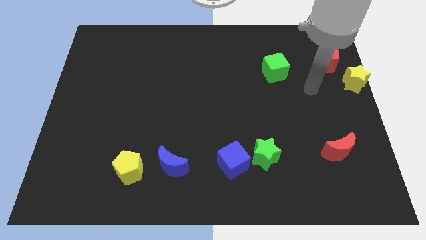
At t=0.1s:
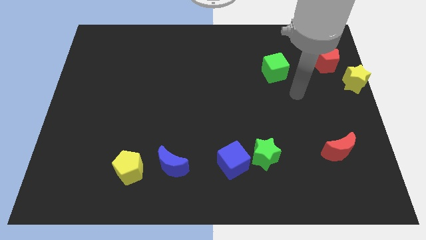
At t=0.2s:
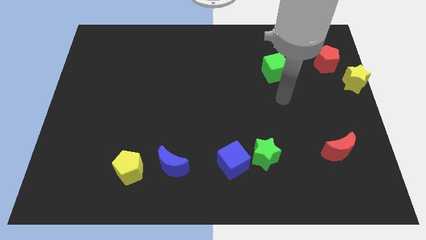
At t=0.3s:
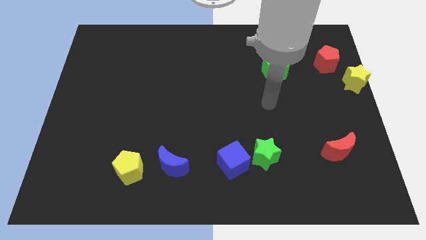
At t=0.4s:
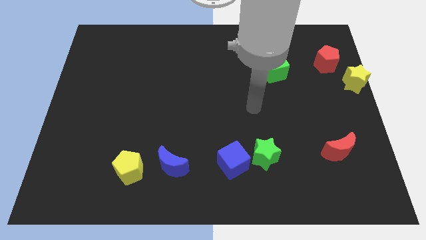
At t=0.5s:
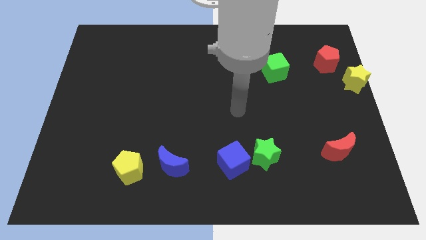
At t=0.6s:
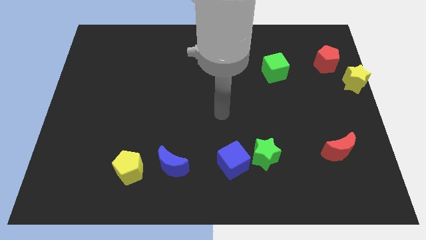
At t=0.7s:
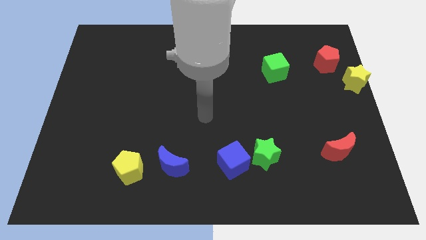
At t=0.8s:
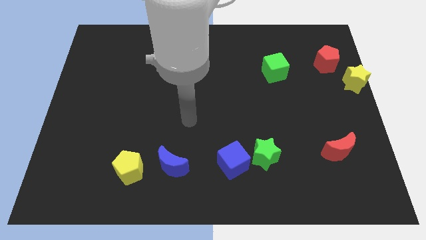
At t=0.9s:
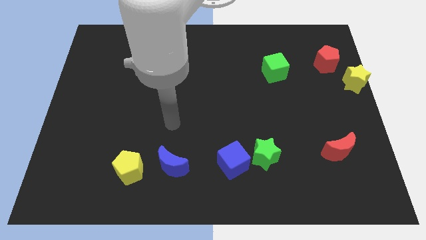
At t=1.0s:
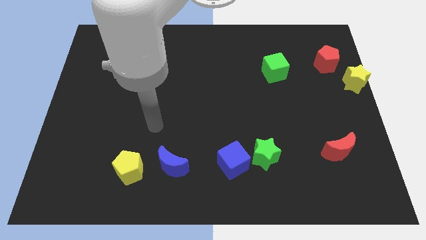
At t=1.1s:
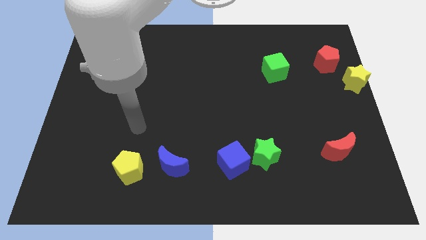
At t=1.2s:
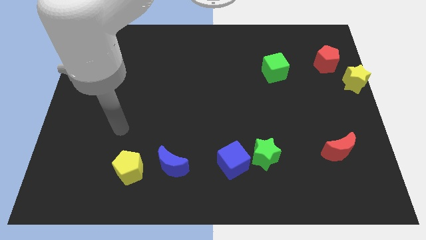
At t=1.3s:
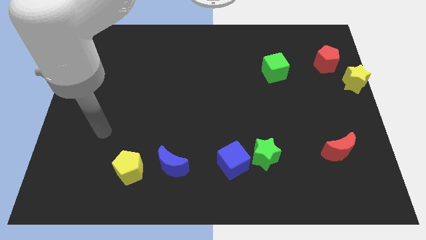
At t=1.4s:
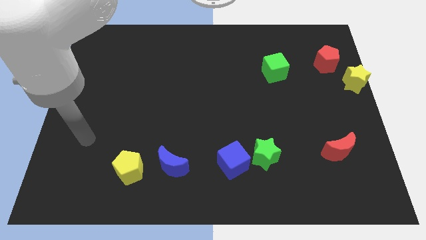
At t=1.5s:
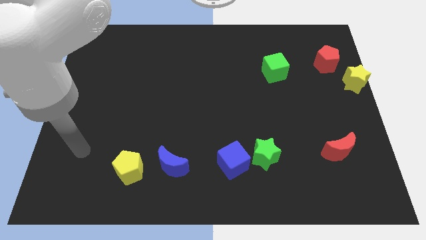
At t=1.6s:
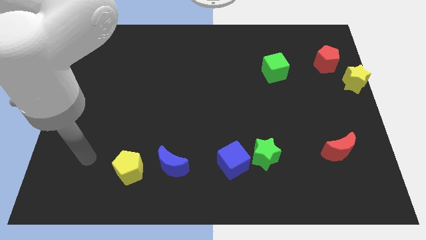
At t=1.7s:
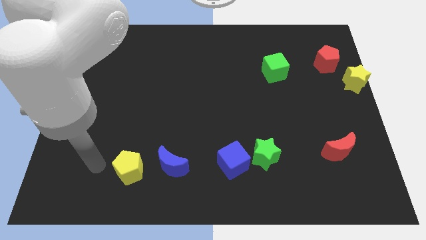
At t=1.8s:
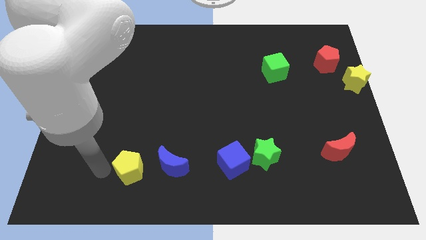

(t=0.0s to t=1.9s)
place the arm left to the yellow pentagon

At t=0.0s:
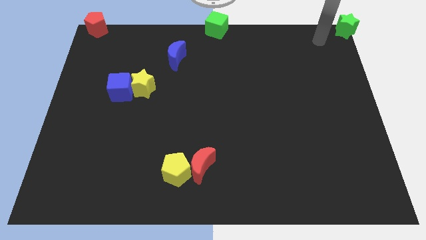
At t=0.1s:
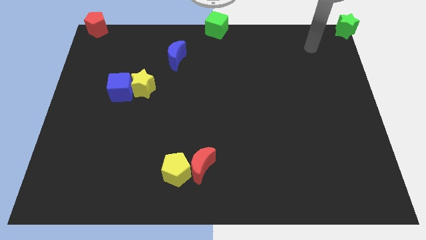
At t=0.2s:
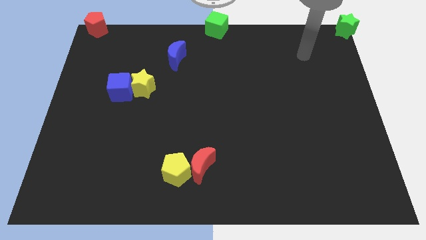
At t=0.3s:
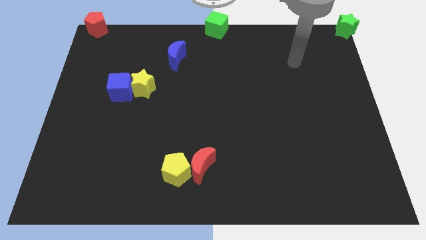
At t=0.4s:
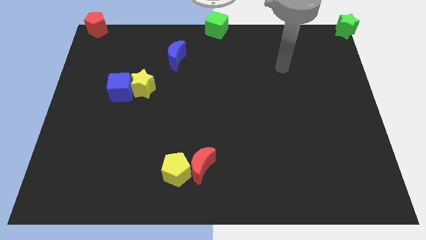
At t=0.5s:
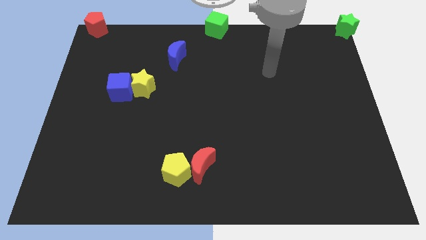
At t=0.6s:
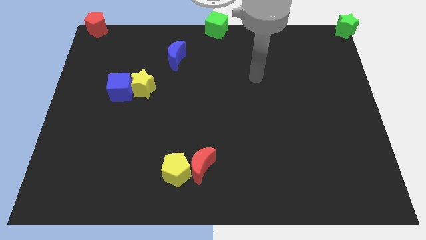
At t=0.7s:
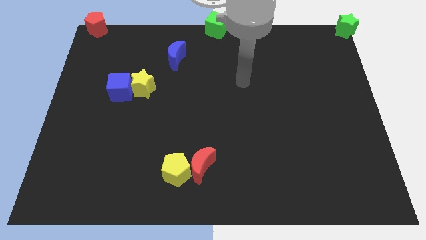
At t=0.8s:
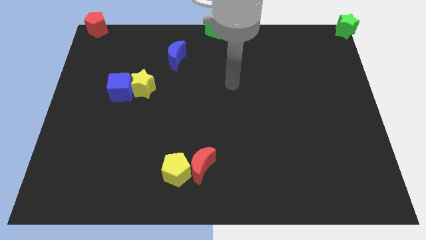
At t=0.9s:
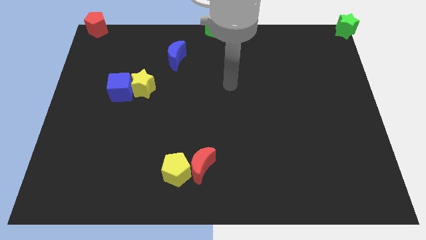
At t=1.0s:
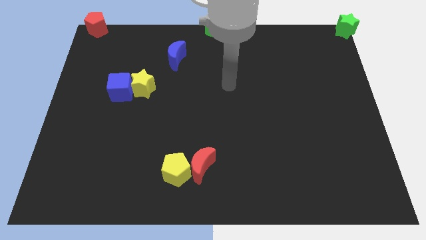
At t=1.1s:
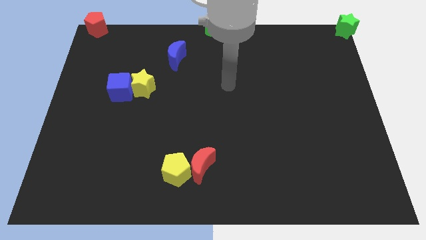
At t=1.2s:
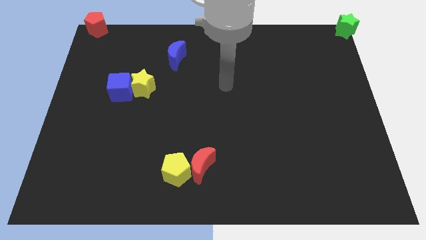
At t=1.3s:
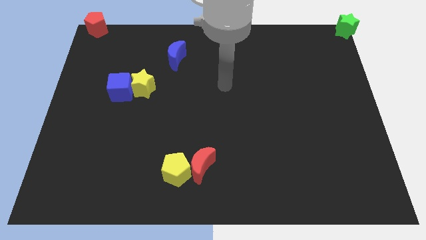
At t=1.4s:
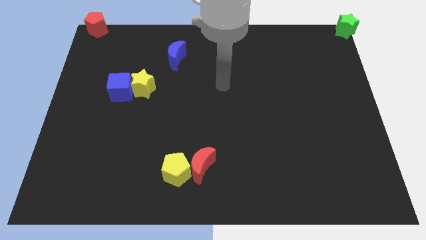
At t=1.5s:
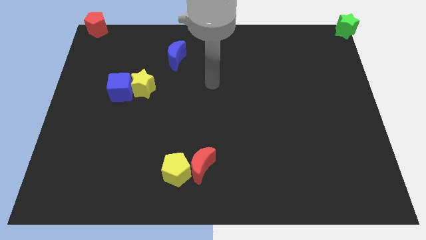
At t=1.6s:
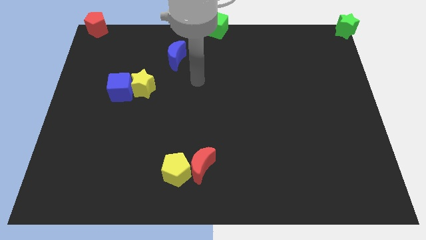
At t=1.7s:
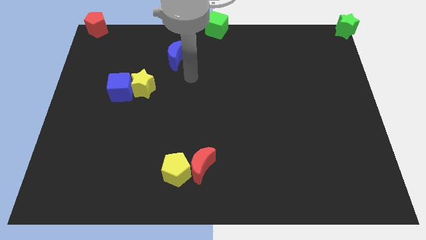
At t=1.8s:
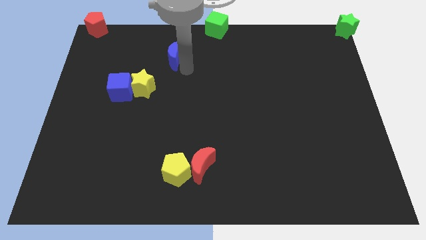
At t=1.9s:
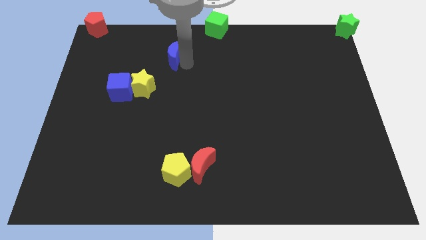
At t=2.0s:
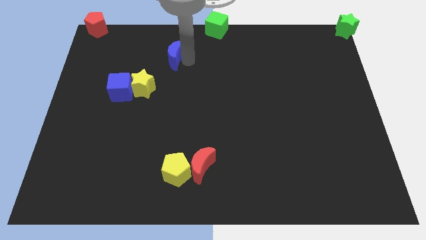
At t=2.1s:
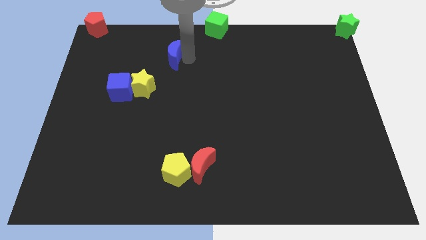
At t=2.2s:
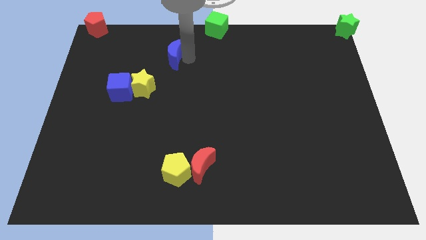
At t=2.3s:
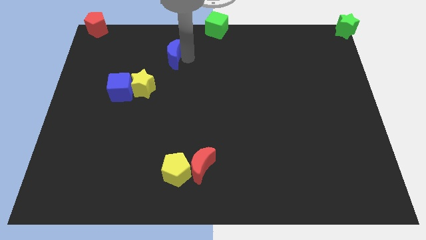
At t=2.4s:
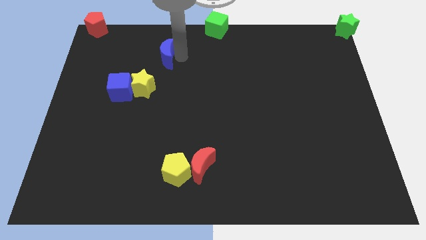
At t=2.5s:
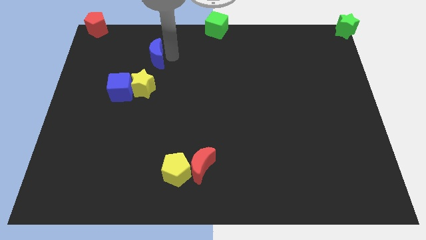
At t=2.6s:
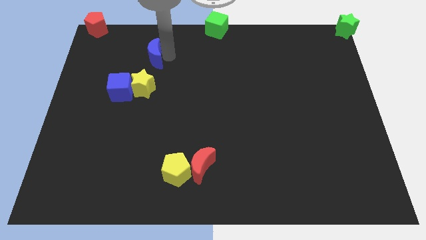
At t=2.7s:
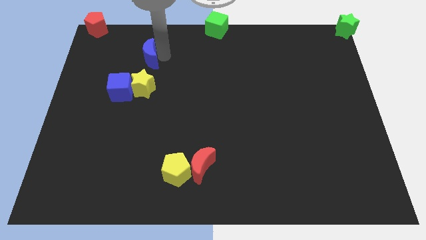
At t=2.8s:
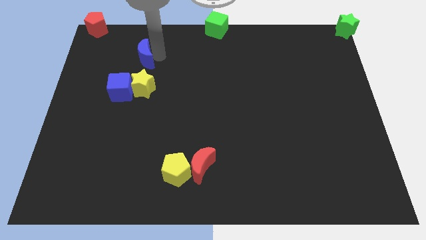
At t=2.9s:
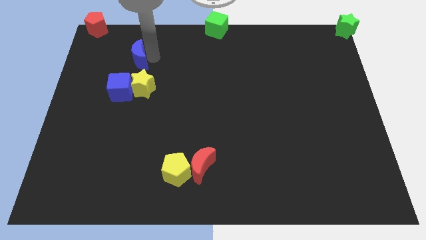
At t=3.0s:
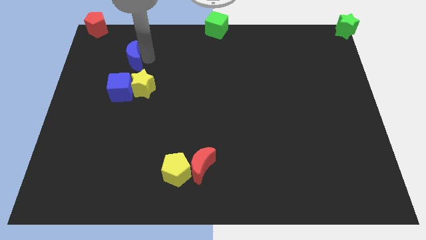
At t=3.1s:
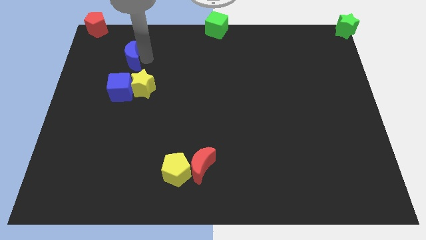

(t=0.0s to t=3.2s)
move the arm to the blue moon

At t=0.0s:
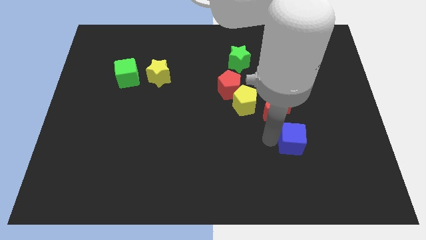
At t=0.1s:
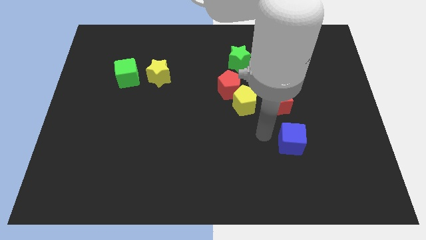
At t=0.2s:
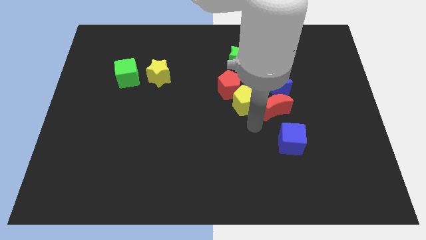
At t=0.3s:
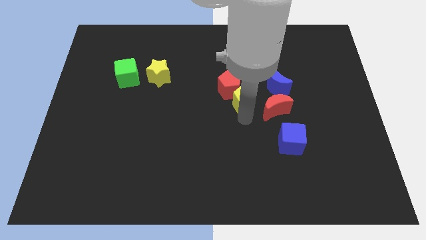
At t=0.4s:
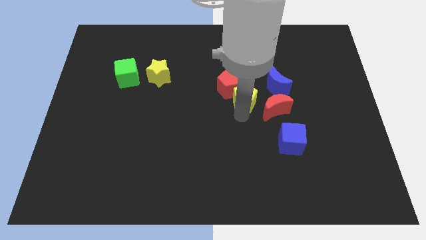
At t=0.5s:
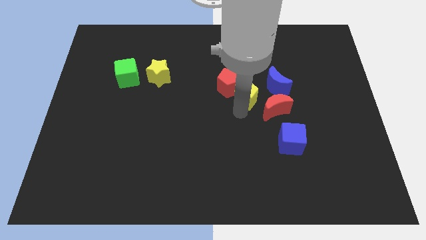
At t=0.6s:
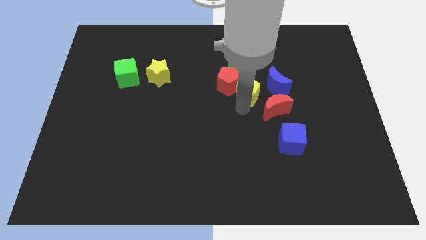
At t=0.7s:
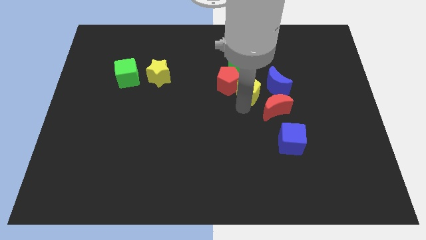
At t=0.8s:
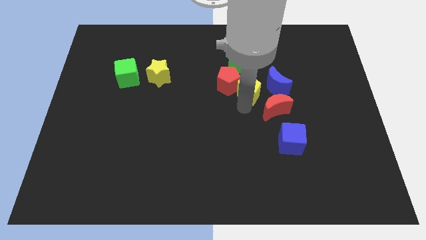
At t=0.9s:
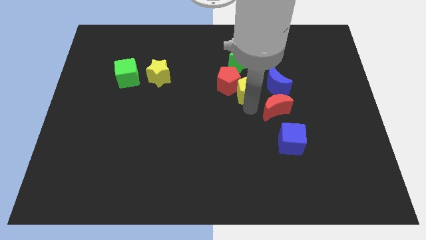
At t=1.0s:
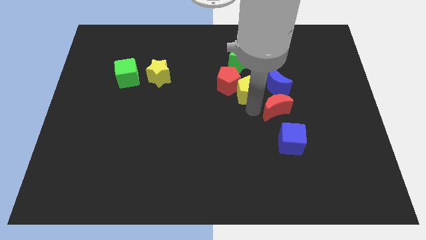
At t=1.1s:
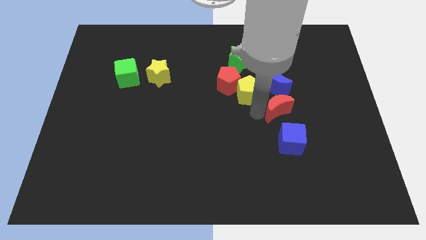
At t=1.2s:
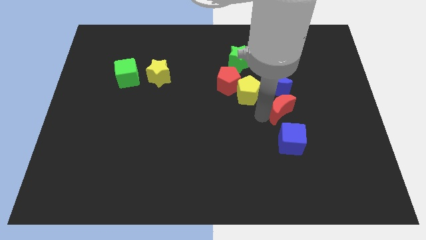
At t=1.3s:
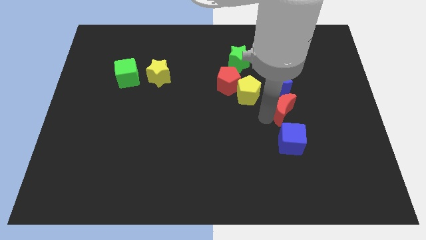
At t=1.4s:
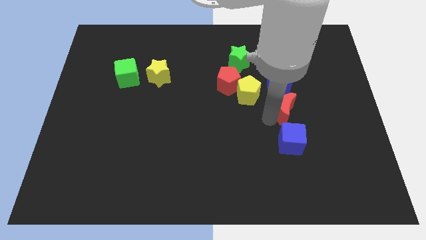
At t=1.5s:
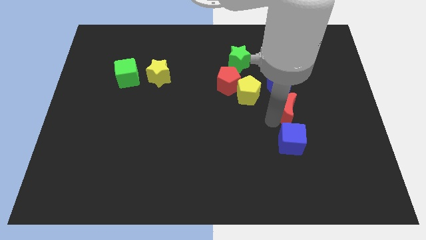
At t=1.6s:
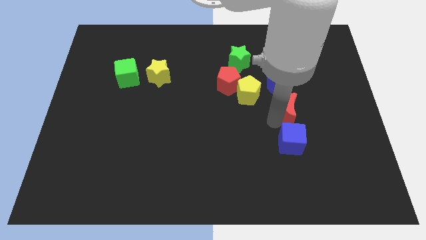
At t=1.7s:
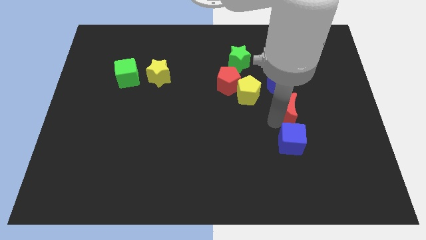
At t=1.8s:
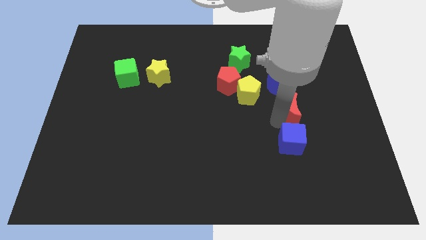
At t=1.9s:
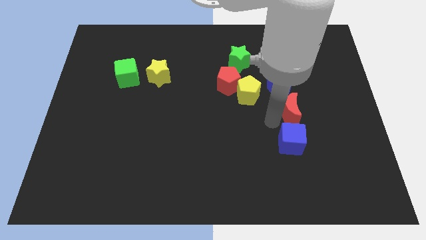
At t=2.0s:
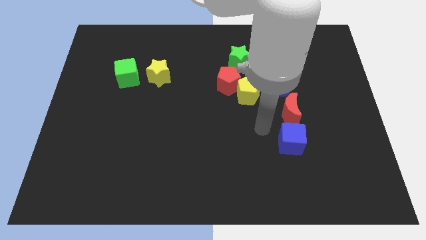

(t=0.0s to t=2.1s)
place the red moon in between the blue crescent and blue cube

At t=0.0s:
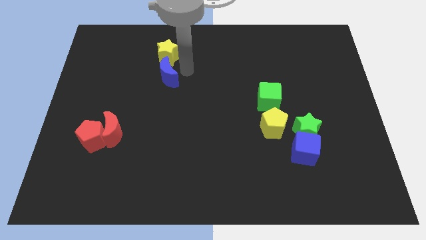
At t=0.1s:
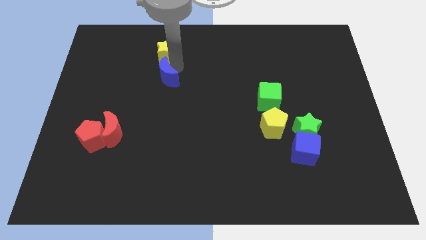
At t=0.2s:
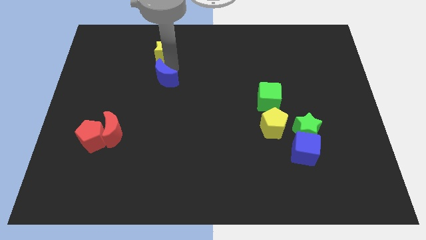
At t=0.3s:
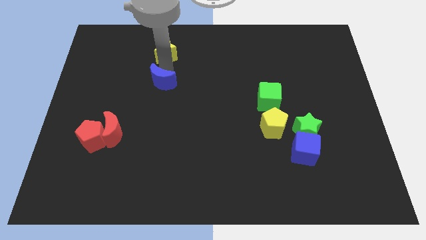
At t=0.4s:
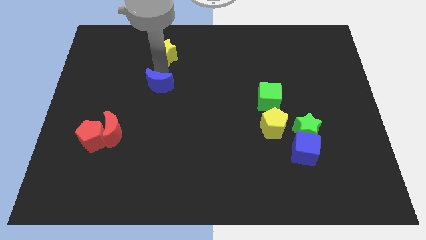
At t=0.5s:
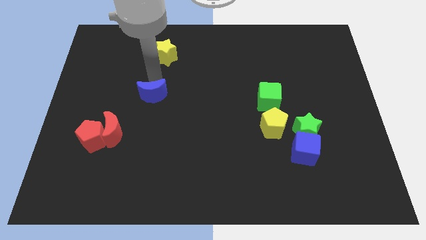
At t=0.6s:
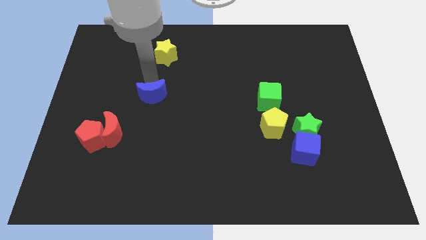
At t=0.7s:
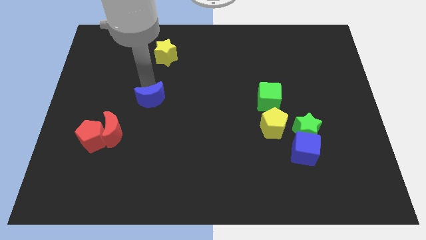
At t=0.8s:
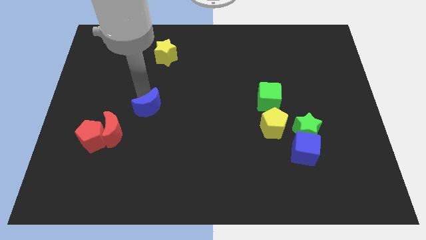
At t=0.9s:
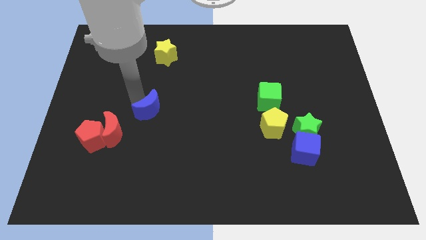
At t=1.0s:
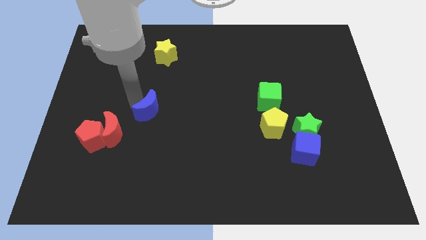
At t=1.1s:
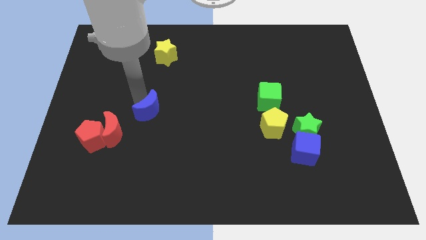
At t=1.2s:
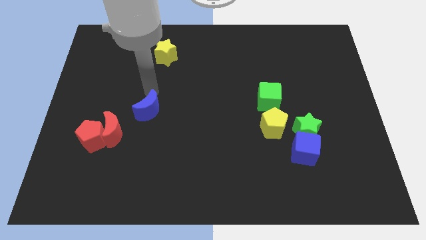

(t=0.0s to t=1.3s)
move the blue crescent to the top right of the red crescent

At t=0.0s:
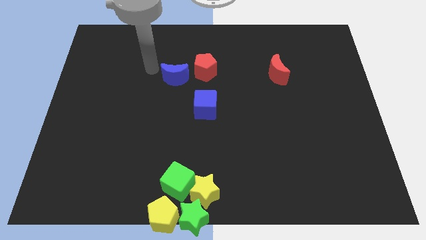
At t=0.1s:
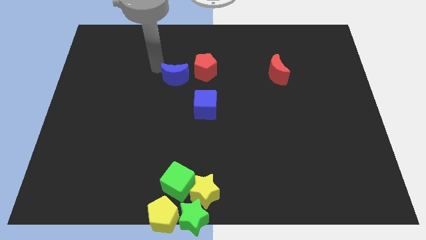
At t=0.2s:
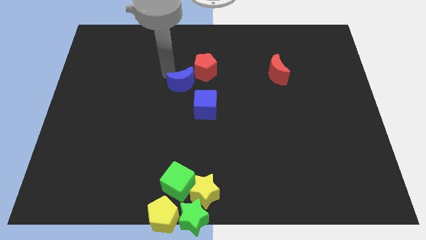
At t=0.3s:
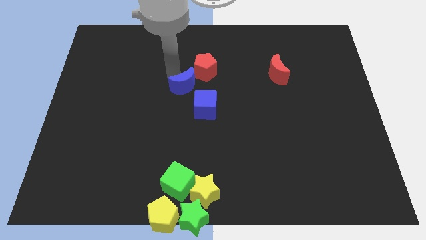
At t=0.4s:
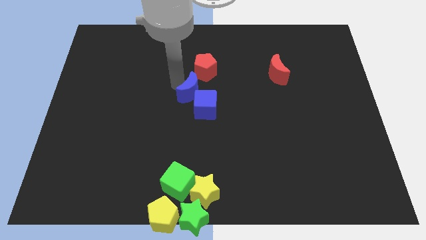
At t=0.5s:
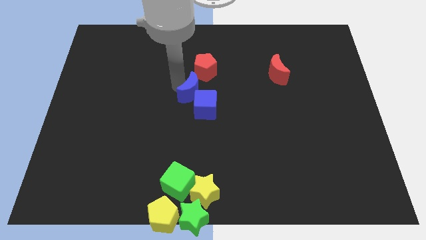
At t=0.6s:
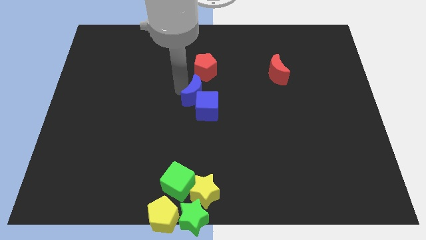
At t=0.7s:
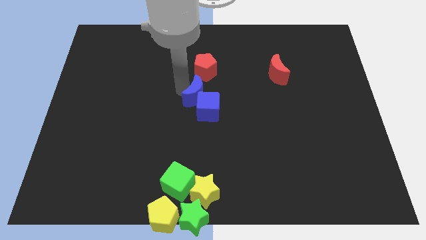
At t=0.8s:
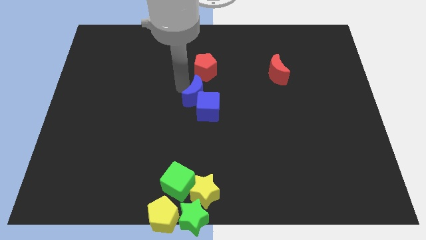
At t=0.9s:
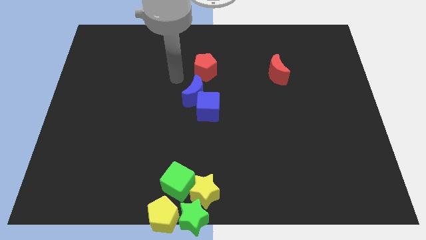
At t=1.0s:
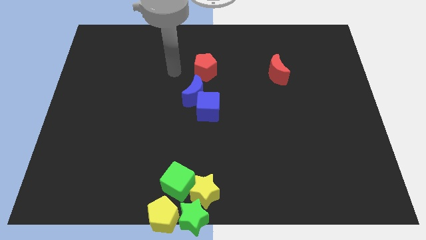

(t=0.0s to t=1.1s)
make the blue crescent to touch the top left of the blue cube
